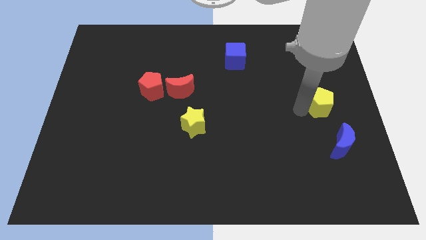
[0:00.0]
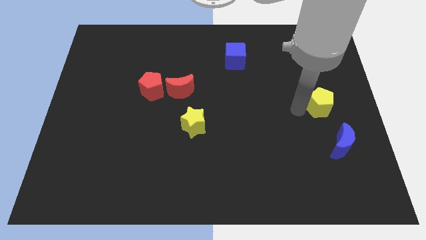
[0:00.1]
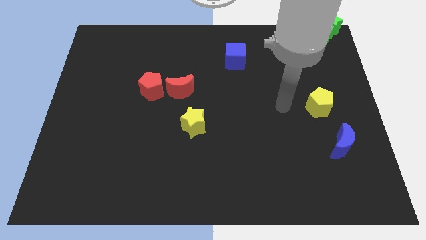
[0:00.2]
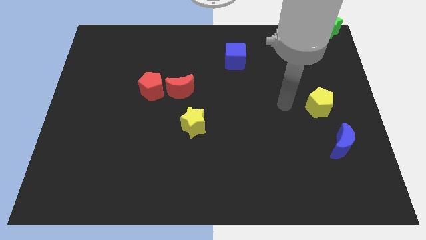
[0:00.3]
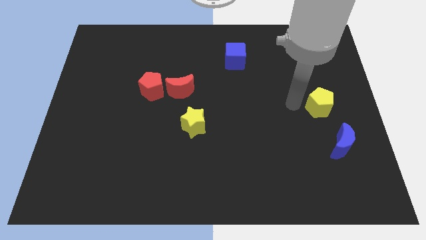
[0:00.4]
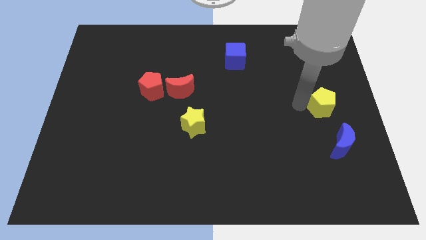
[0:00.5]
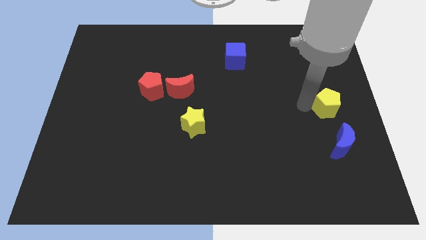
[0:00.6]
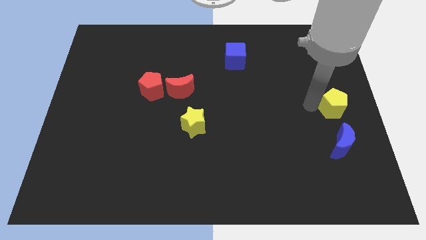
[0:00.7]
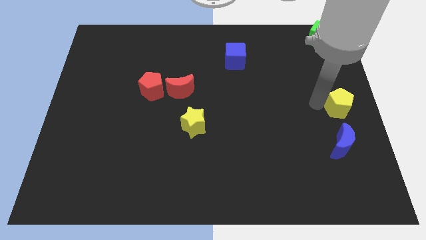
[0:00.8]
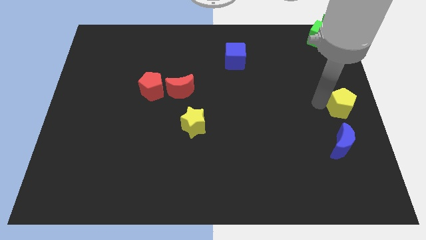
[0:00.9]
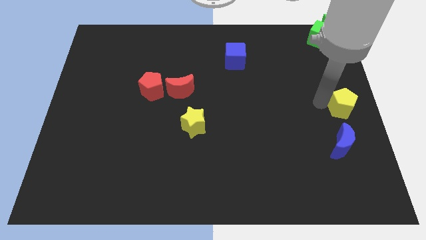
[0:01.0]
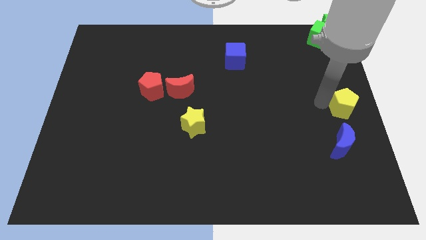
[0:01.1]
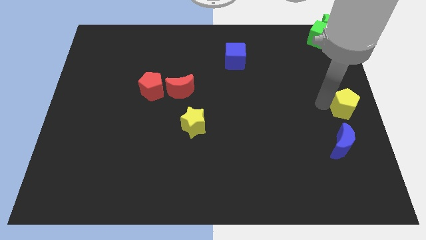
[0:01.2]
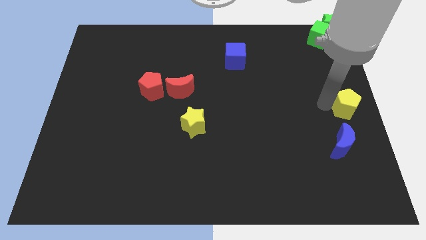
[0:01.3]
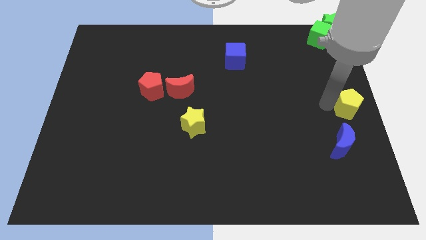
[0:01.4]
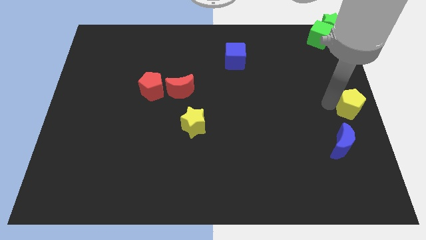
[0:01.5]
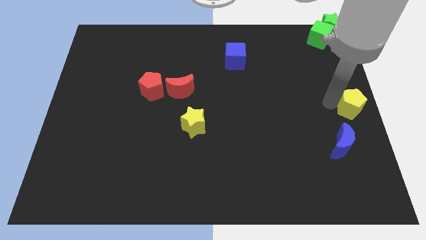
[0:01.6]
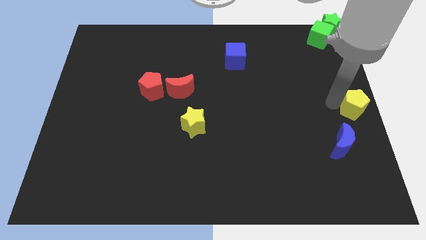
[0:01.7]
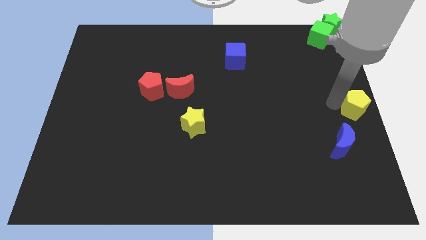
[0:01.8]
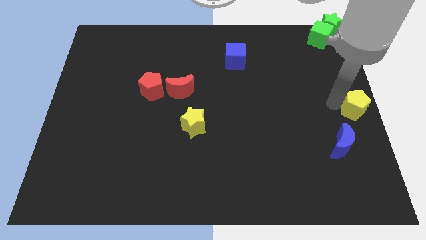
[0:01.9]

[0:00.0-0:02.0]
move the yellow pentagon to the center right of the board

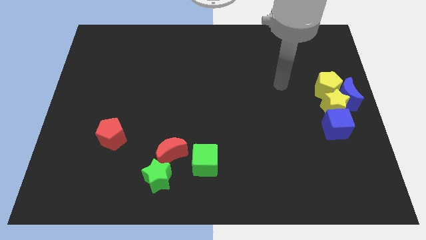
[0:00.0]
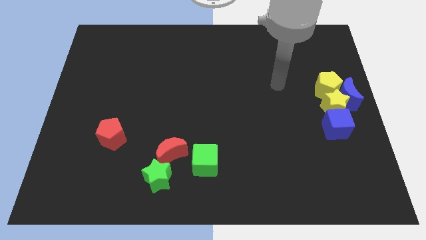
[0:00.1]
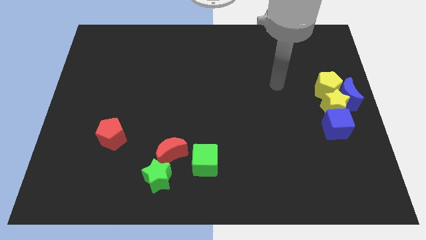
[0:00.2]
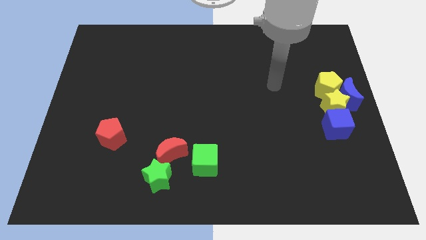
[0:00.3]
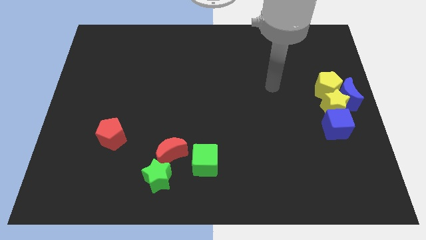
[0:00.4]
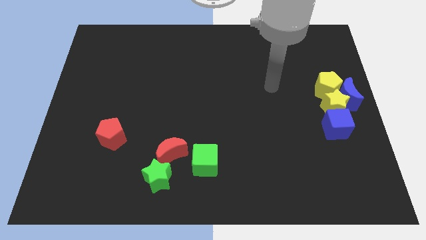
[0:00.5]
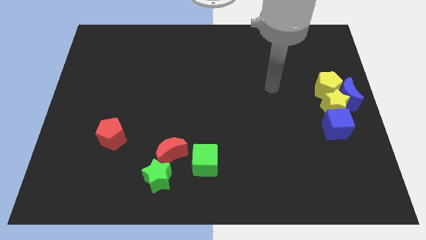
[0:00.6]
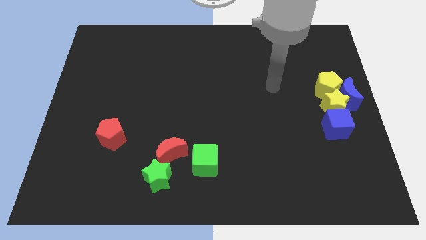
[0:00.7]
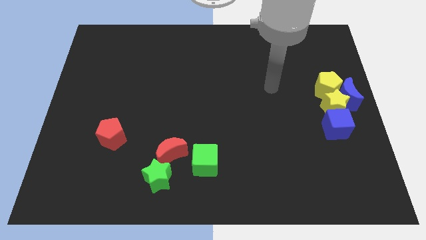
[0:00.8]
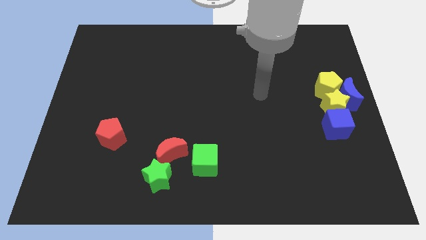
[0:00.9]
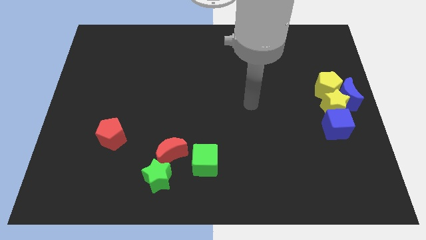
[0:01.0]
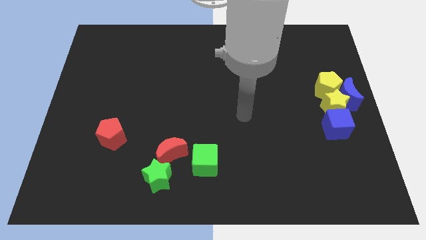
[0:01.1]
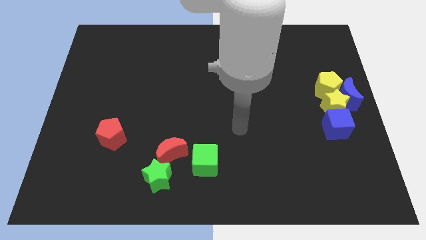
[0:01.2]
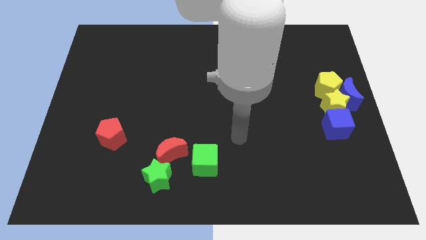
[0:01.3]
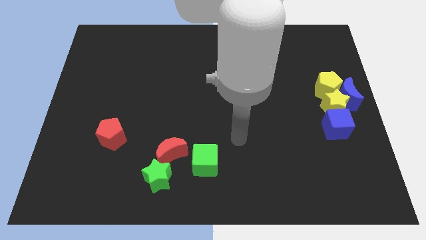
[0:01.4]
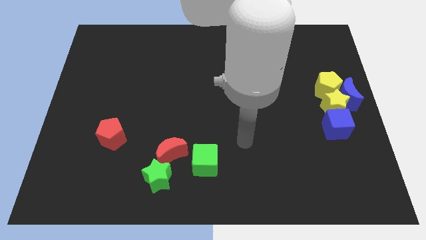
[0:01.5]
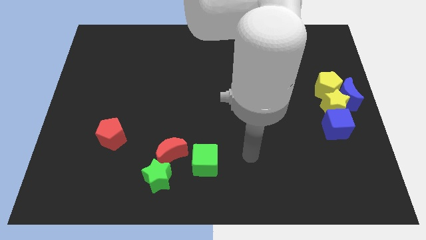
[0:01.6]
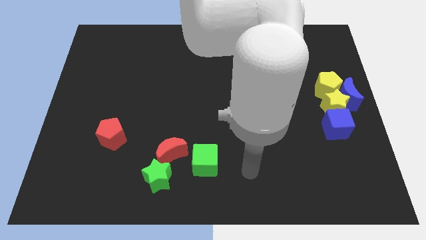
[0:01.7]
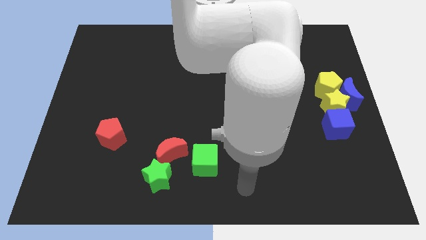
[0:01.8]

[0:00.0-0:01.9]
move your arm to the bottom center of the board

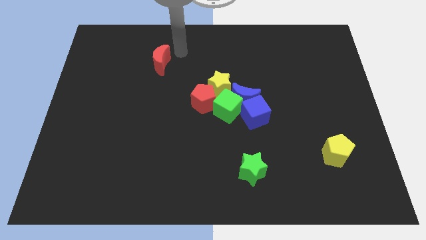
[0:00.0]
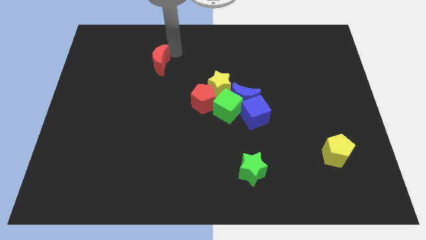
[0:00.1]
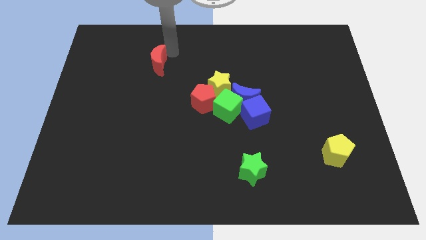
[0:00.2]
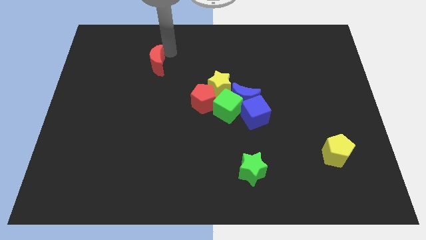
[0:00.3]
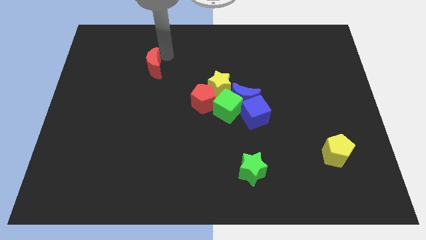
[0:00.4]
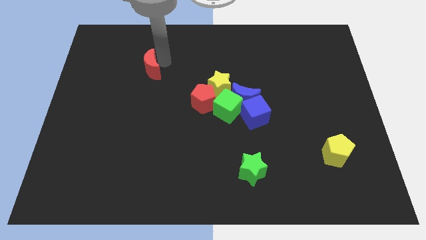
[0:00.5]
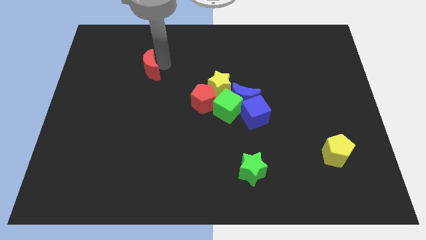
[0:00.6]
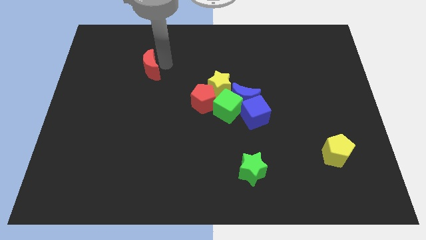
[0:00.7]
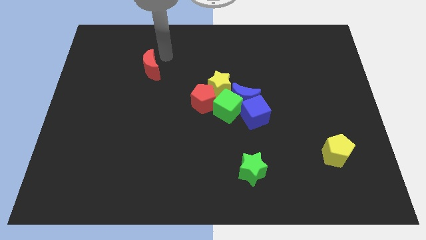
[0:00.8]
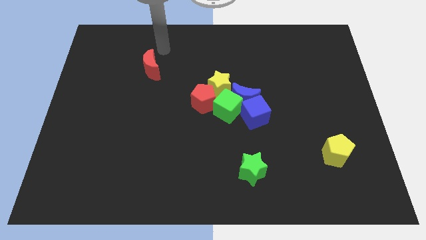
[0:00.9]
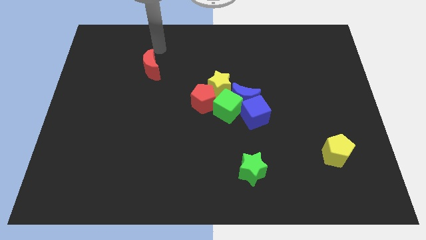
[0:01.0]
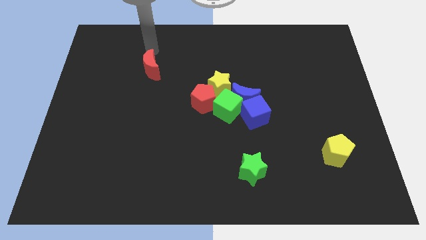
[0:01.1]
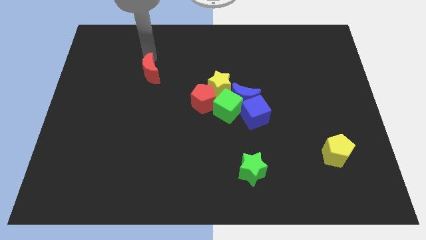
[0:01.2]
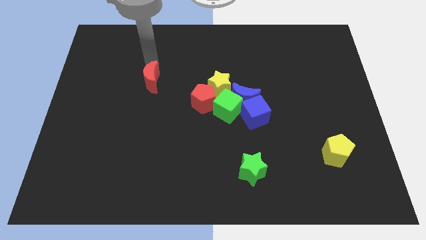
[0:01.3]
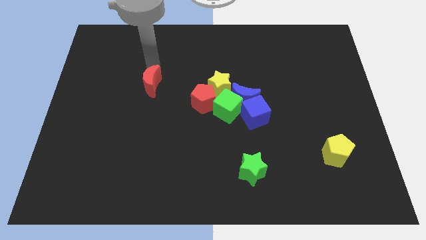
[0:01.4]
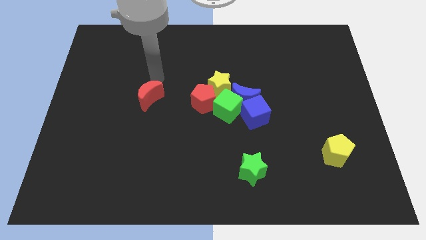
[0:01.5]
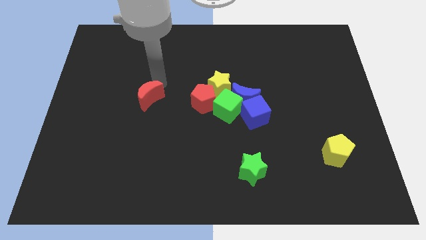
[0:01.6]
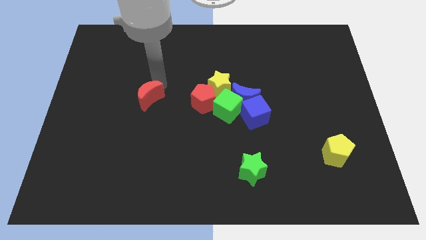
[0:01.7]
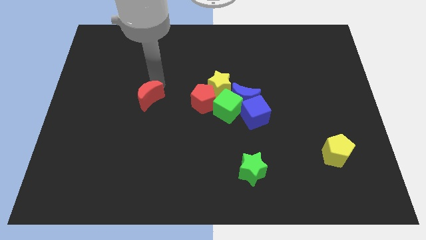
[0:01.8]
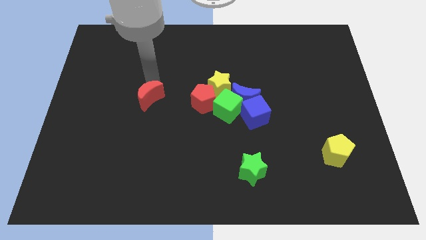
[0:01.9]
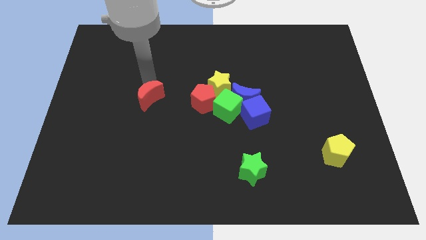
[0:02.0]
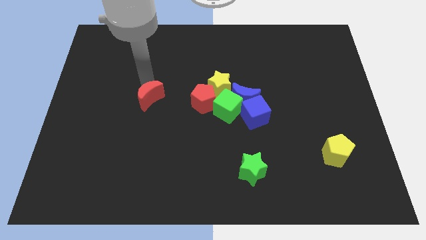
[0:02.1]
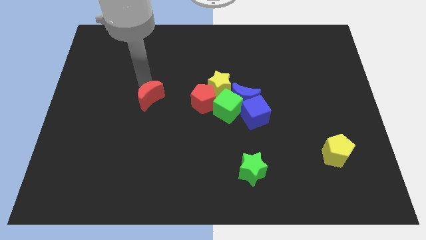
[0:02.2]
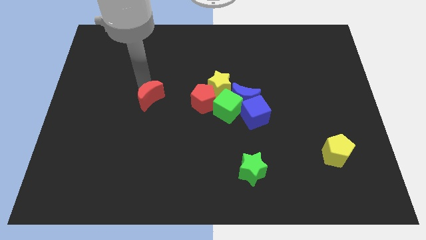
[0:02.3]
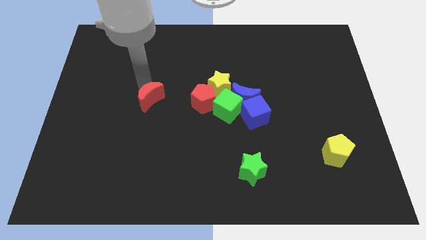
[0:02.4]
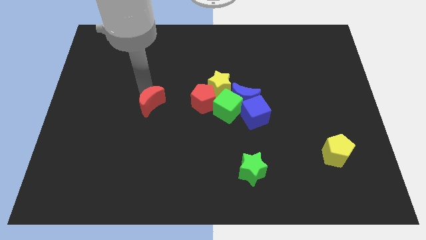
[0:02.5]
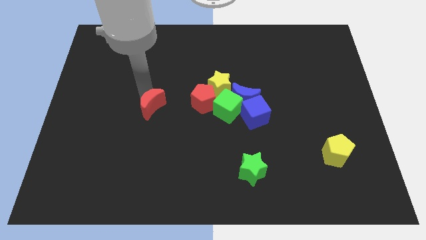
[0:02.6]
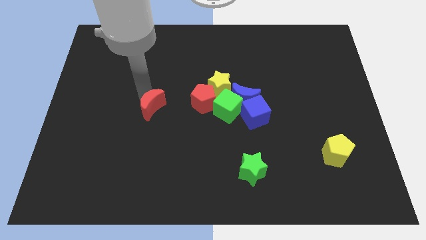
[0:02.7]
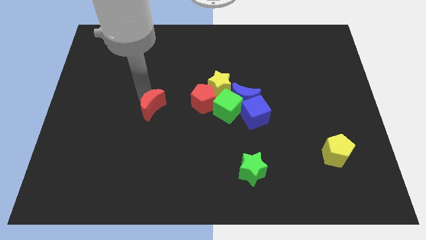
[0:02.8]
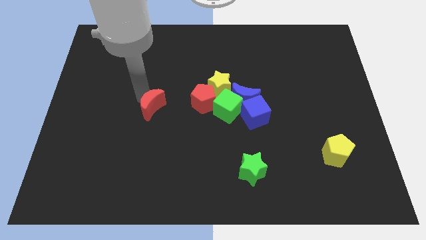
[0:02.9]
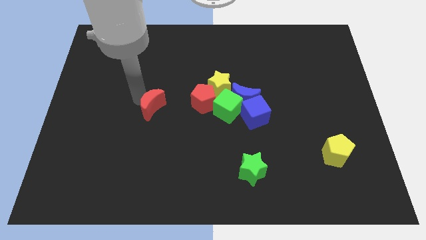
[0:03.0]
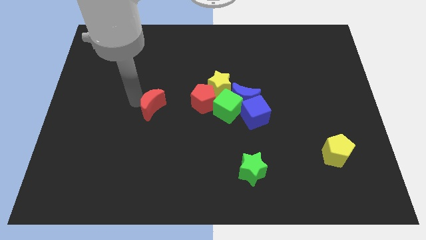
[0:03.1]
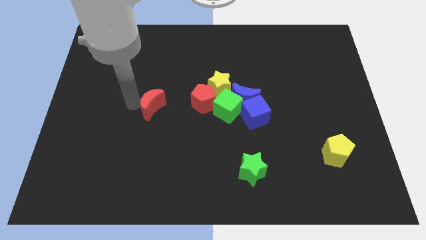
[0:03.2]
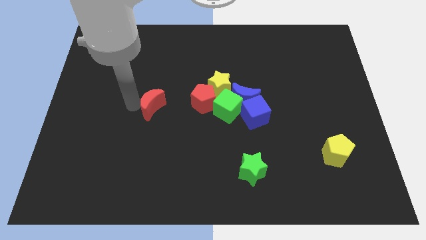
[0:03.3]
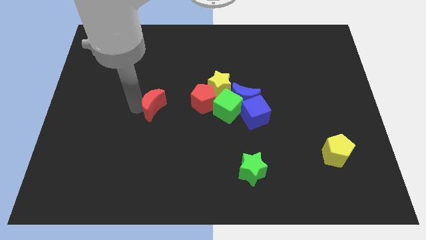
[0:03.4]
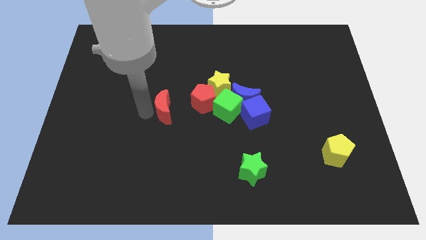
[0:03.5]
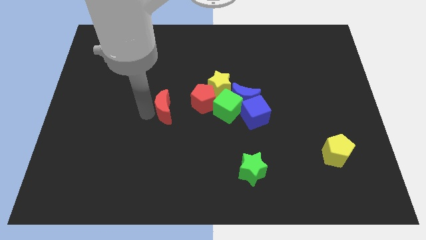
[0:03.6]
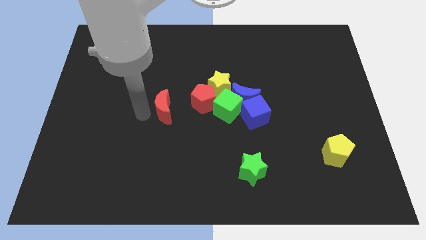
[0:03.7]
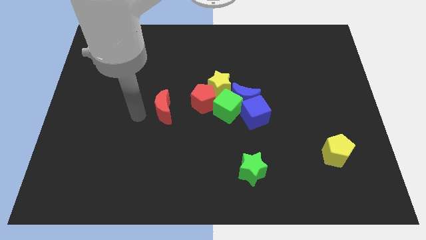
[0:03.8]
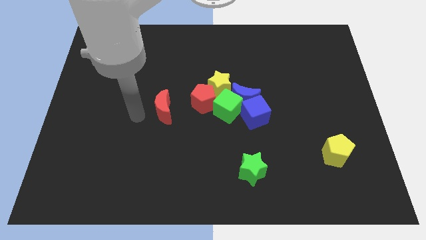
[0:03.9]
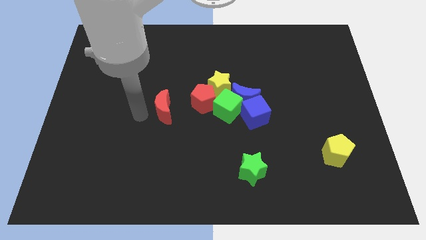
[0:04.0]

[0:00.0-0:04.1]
place the red crescent left to the red pentagon

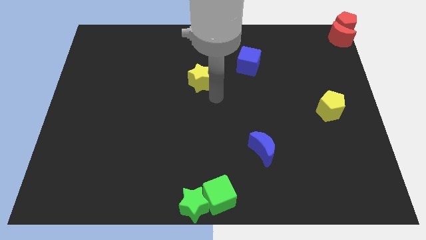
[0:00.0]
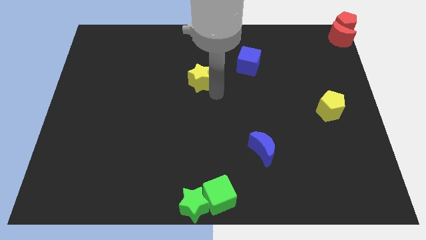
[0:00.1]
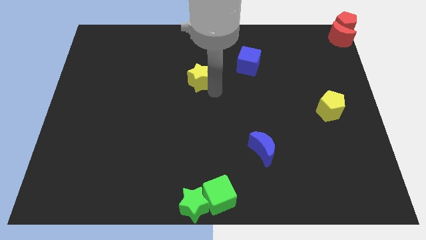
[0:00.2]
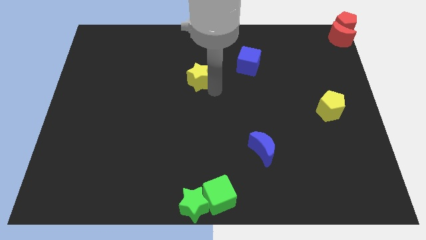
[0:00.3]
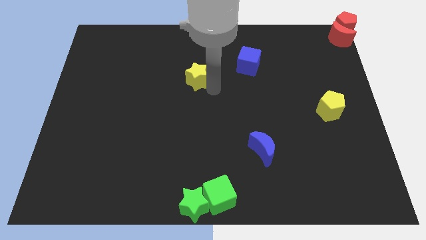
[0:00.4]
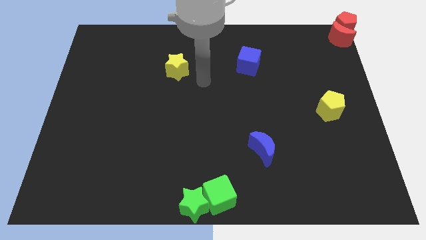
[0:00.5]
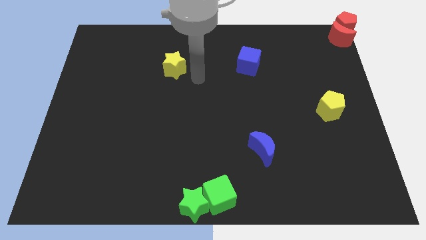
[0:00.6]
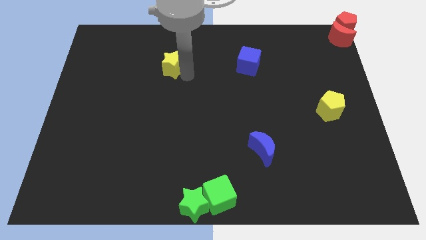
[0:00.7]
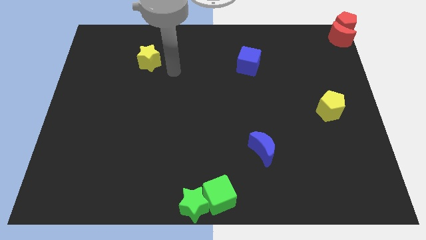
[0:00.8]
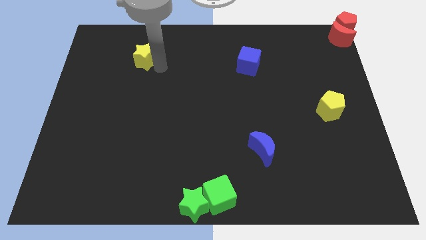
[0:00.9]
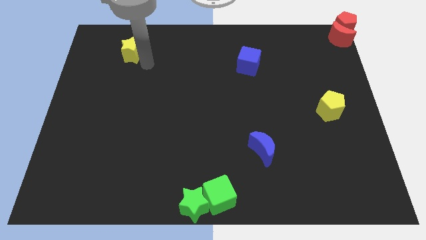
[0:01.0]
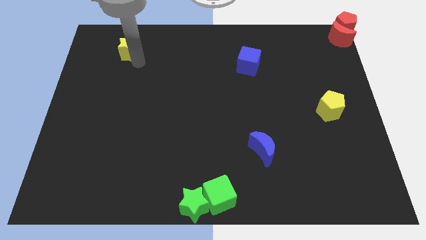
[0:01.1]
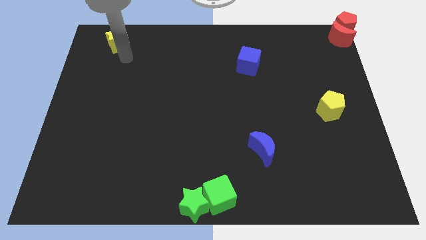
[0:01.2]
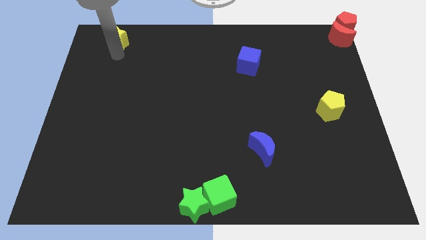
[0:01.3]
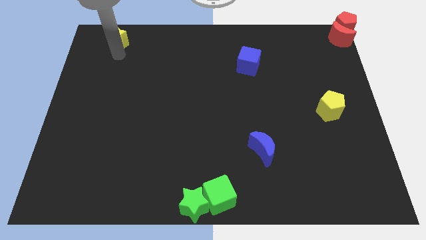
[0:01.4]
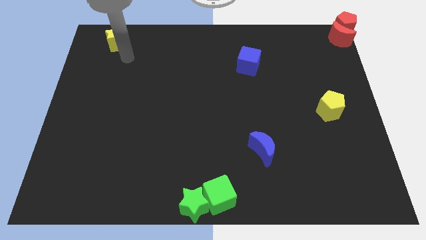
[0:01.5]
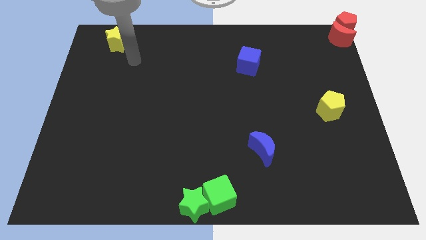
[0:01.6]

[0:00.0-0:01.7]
move the yellow star to the top left of the board
